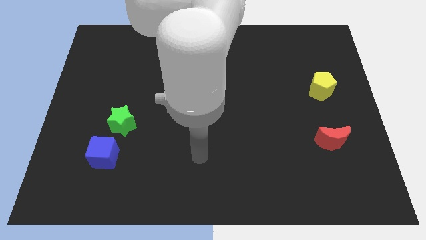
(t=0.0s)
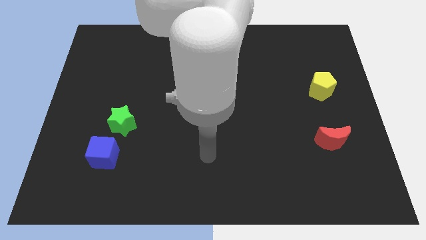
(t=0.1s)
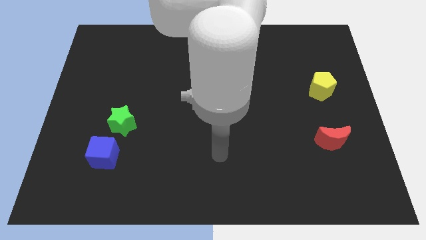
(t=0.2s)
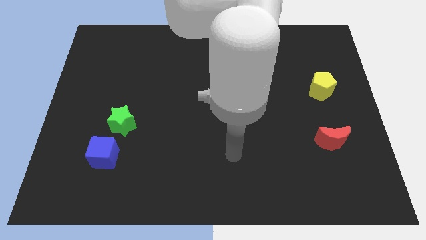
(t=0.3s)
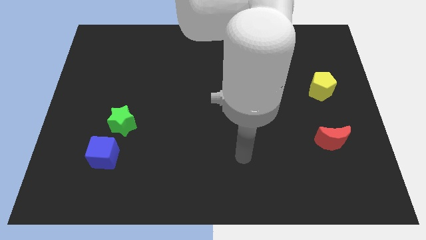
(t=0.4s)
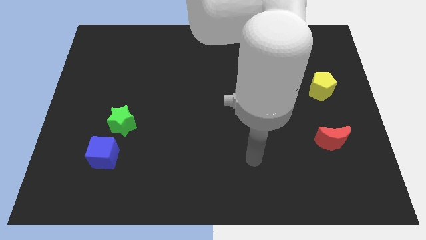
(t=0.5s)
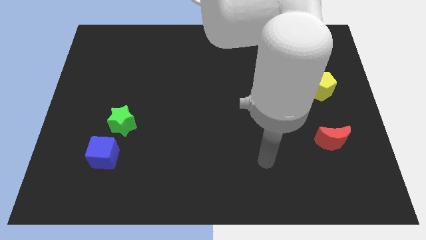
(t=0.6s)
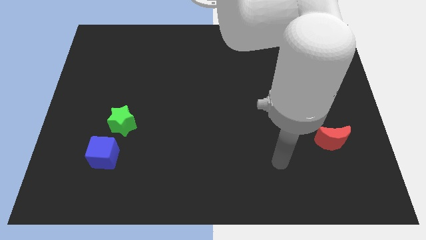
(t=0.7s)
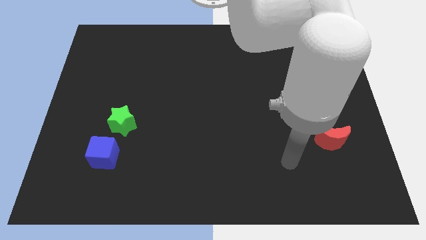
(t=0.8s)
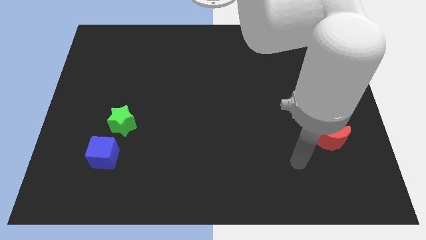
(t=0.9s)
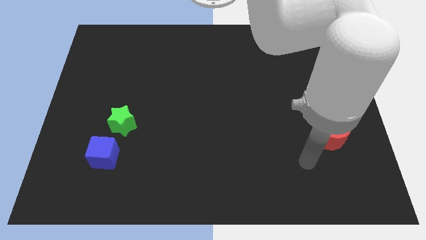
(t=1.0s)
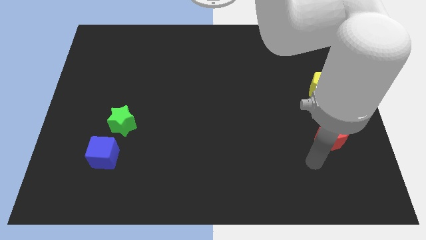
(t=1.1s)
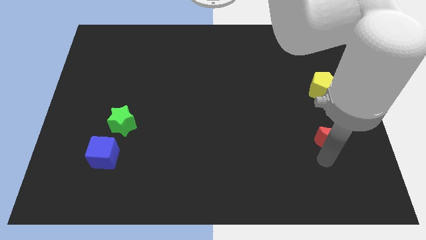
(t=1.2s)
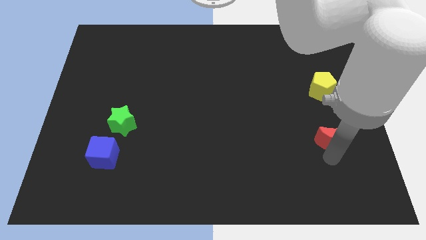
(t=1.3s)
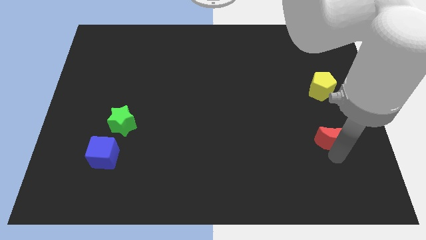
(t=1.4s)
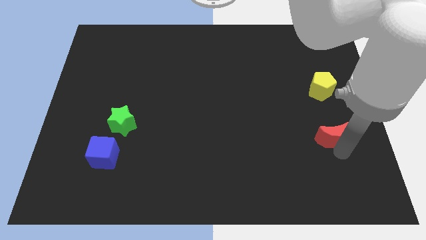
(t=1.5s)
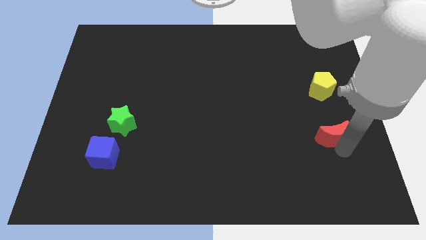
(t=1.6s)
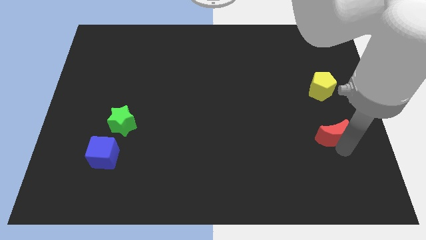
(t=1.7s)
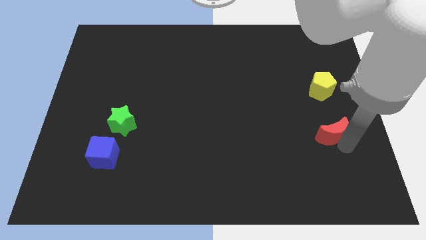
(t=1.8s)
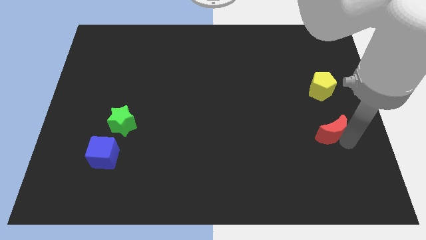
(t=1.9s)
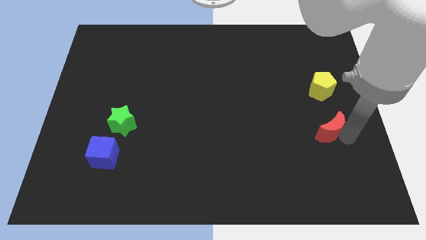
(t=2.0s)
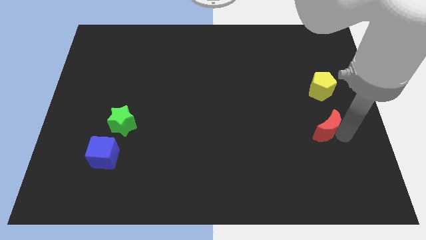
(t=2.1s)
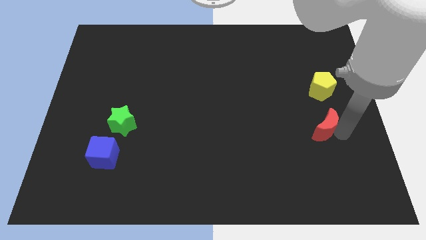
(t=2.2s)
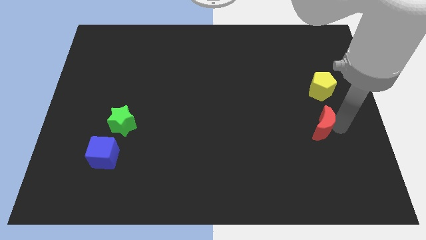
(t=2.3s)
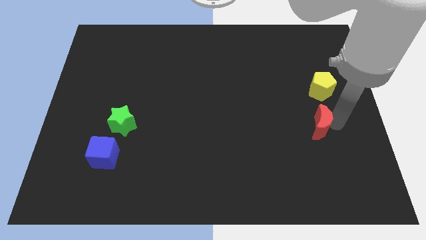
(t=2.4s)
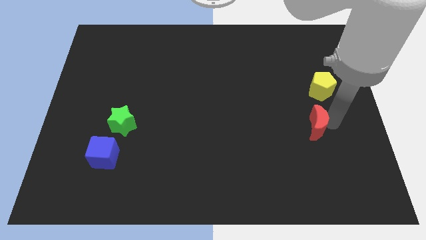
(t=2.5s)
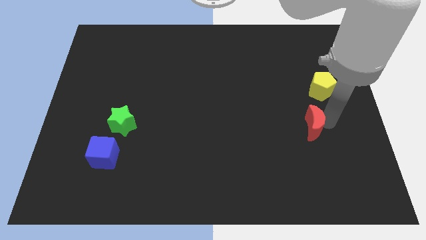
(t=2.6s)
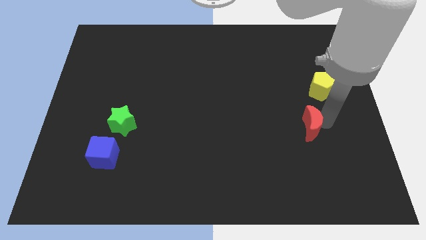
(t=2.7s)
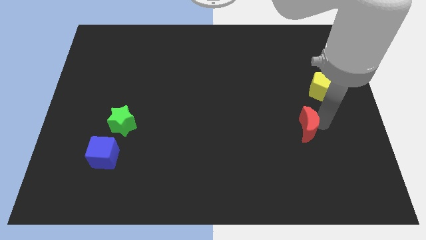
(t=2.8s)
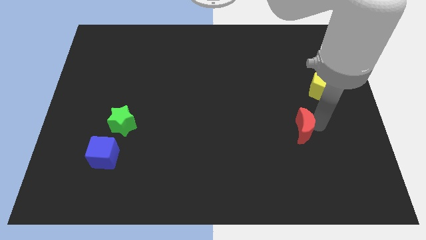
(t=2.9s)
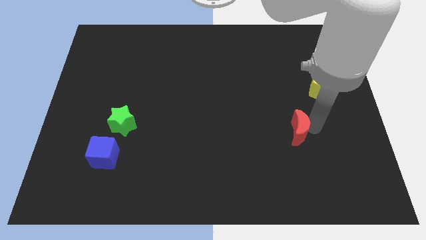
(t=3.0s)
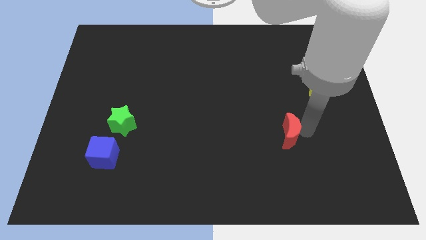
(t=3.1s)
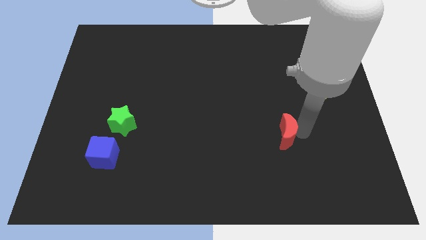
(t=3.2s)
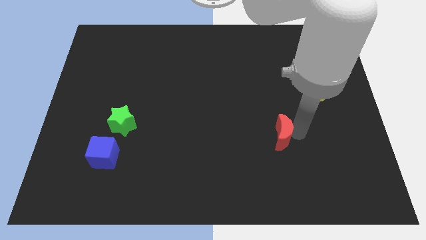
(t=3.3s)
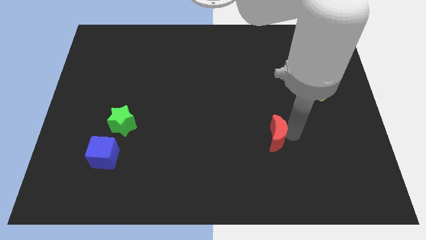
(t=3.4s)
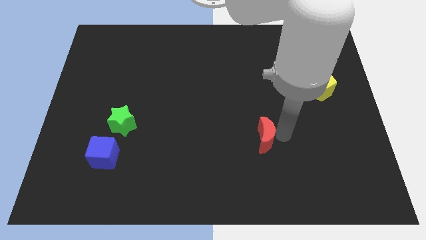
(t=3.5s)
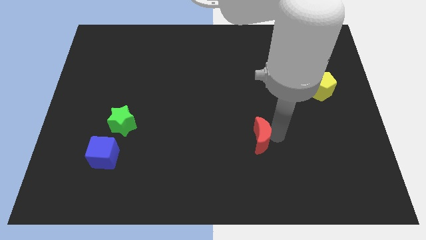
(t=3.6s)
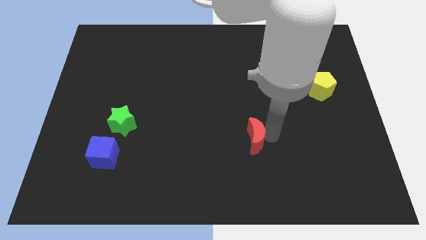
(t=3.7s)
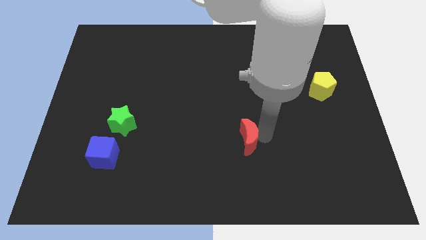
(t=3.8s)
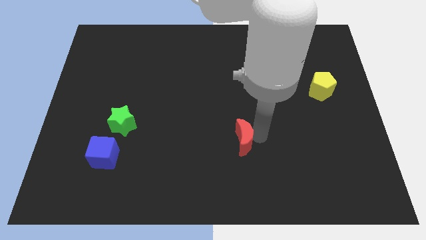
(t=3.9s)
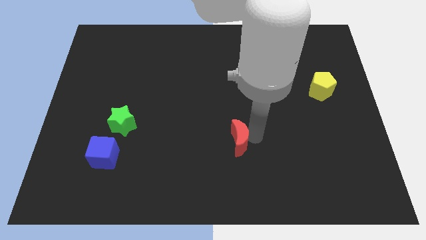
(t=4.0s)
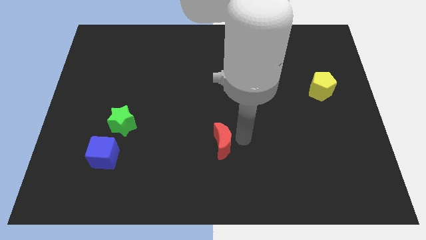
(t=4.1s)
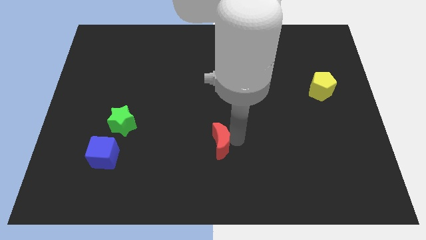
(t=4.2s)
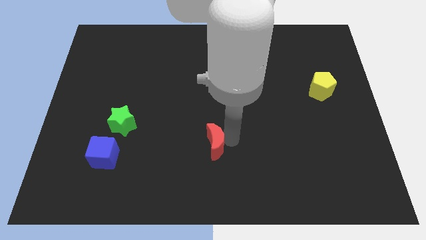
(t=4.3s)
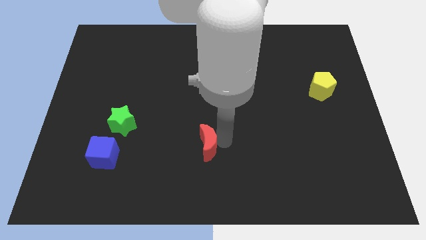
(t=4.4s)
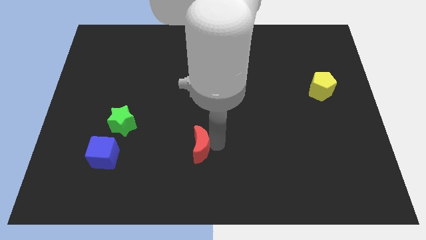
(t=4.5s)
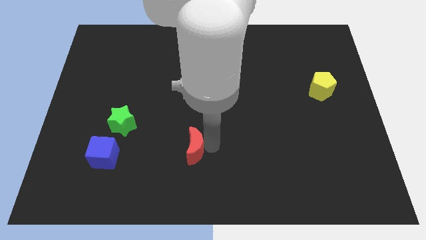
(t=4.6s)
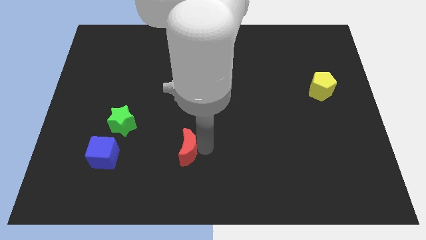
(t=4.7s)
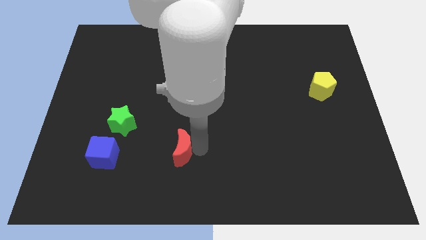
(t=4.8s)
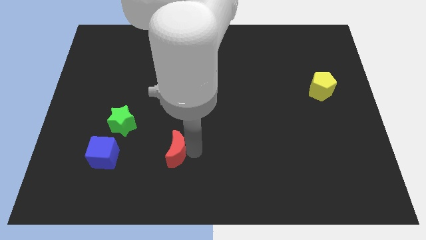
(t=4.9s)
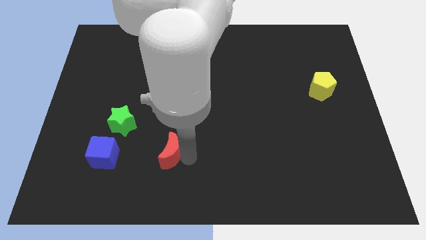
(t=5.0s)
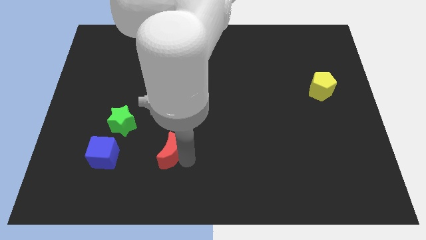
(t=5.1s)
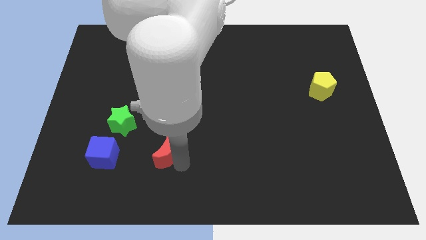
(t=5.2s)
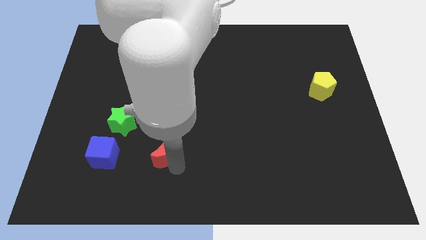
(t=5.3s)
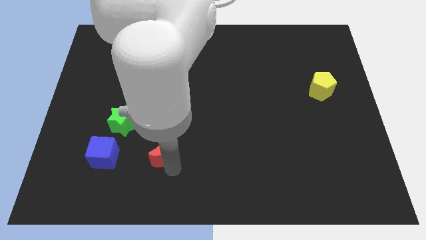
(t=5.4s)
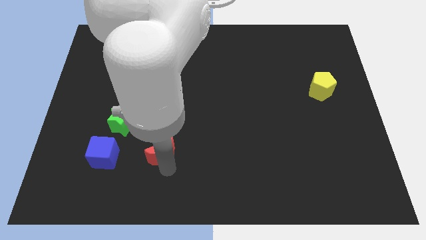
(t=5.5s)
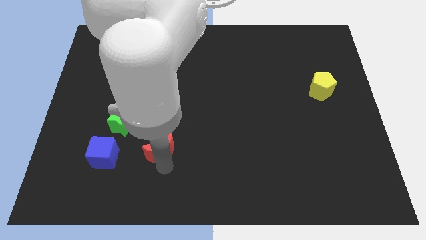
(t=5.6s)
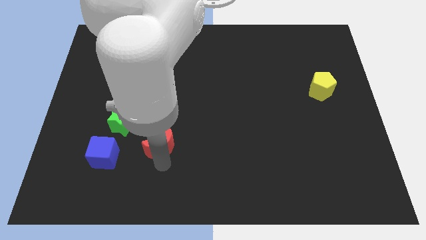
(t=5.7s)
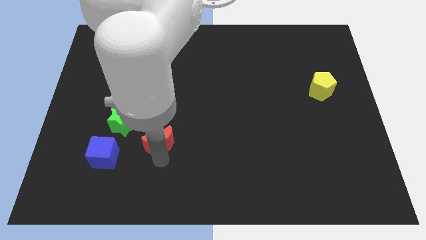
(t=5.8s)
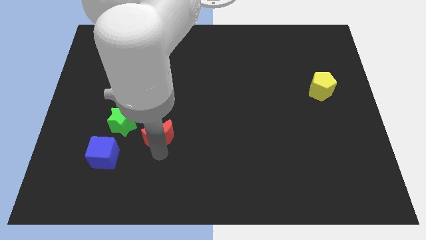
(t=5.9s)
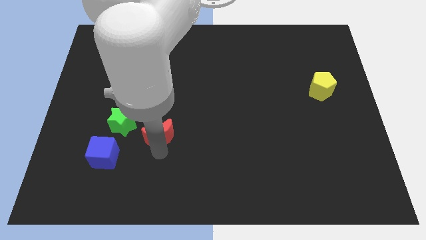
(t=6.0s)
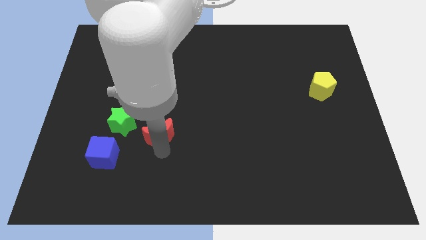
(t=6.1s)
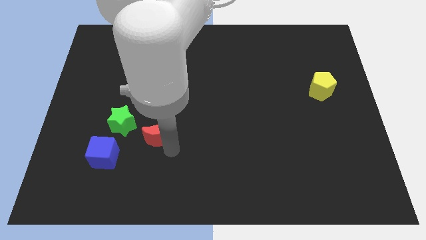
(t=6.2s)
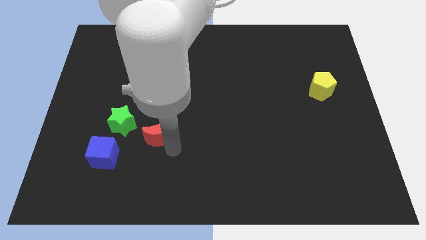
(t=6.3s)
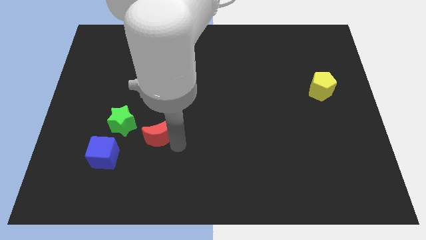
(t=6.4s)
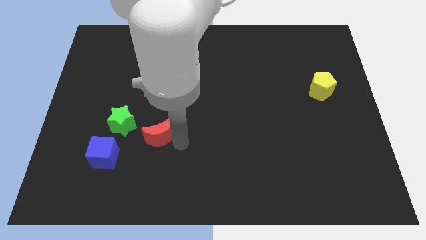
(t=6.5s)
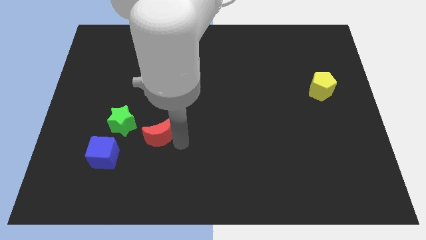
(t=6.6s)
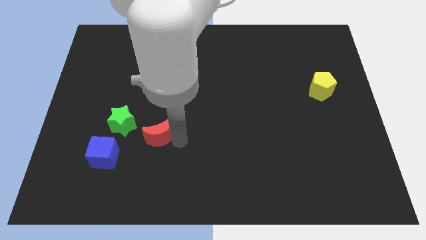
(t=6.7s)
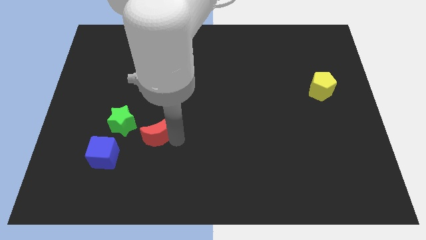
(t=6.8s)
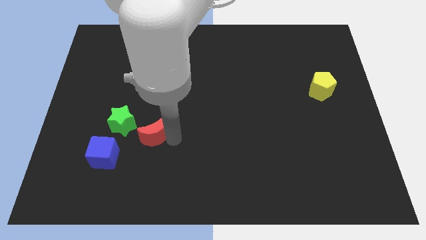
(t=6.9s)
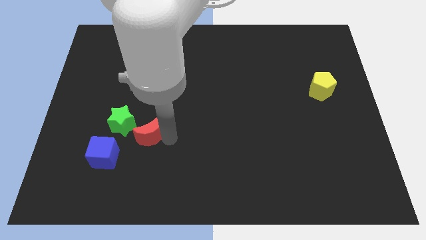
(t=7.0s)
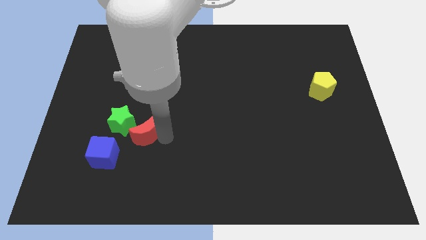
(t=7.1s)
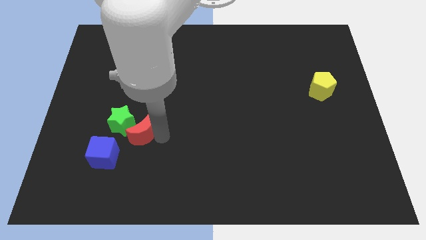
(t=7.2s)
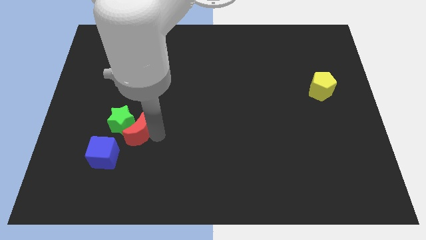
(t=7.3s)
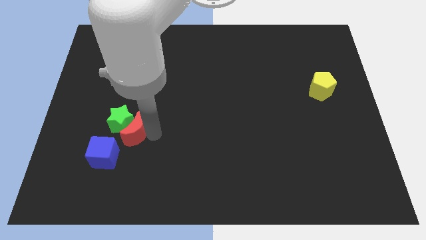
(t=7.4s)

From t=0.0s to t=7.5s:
put the moon towards the star

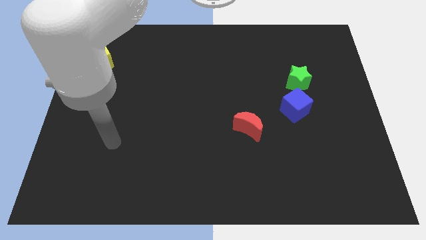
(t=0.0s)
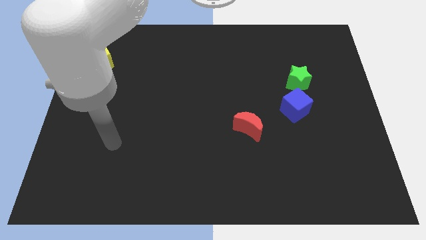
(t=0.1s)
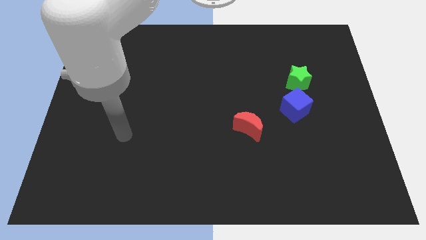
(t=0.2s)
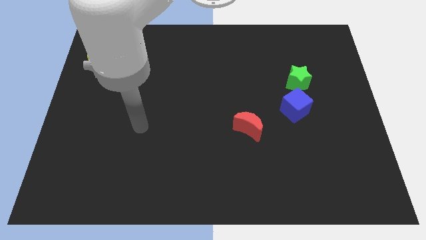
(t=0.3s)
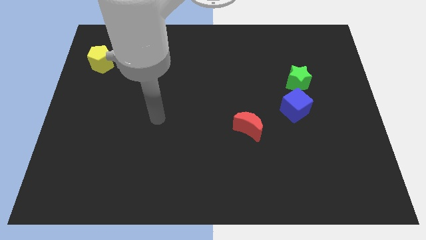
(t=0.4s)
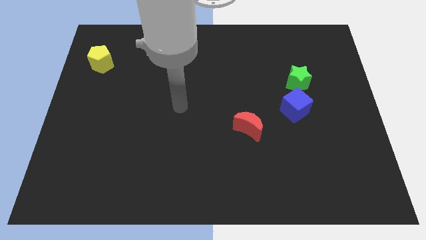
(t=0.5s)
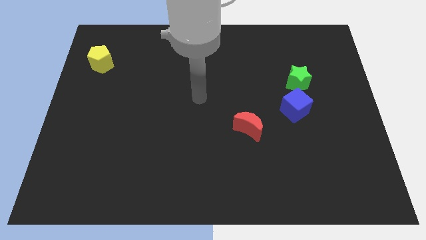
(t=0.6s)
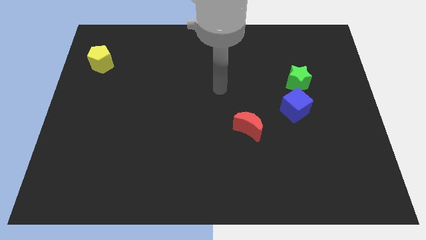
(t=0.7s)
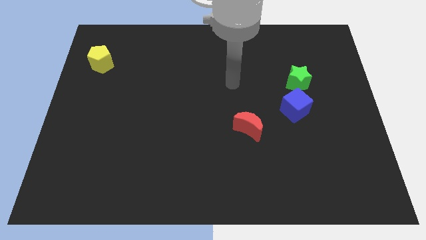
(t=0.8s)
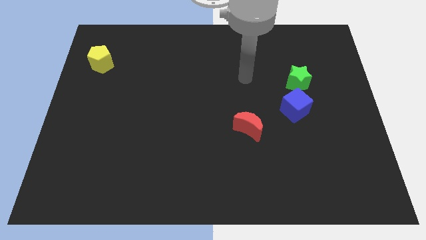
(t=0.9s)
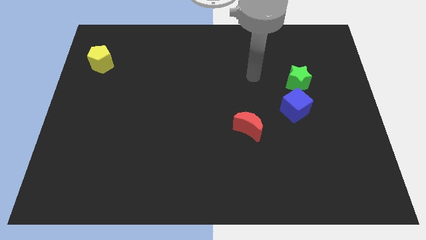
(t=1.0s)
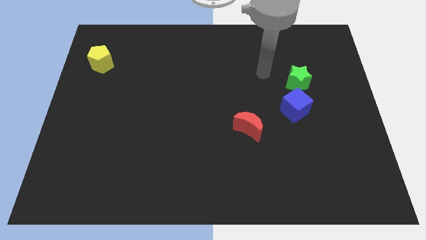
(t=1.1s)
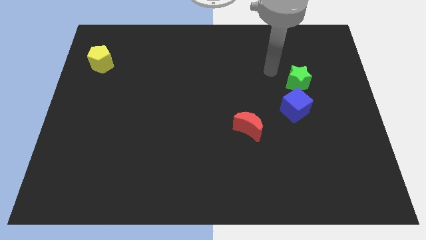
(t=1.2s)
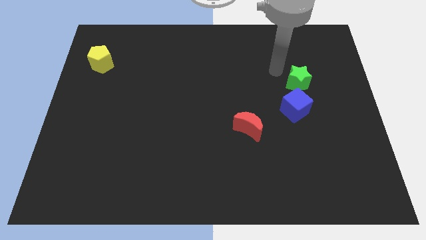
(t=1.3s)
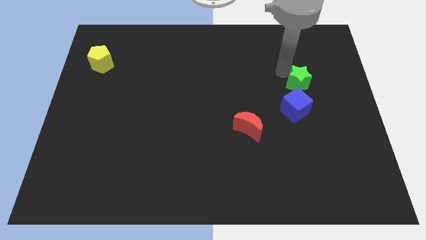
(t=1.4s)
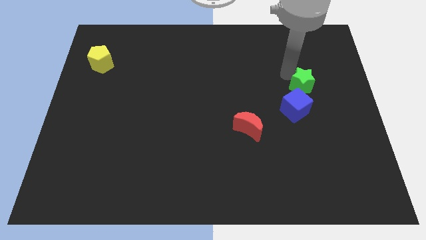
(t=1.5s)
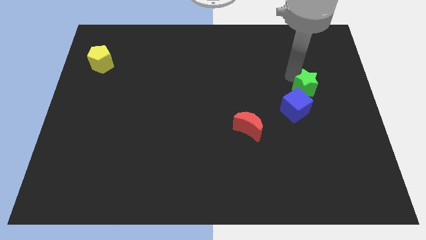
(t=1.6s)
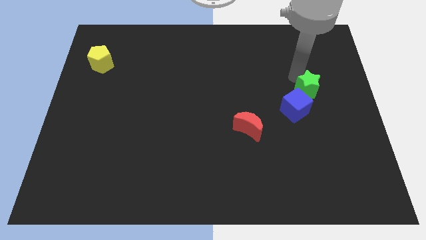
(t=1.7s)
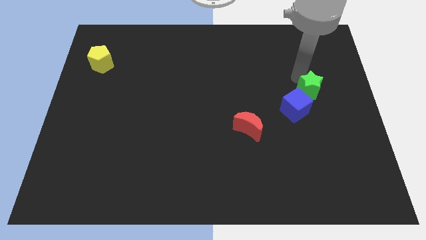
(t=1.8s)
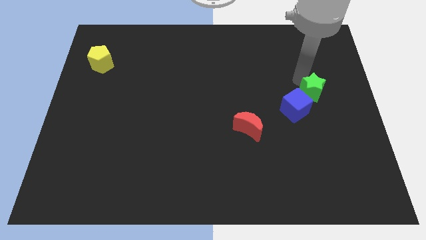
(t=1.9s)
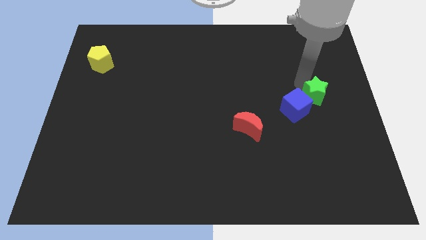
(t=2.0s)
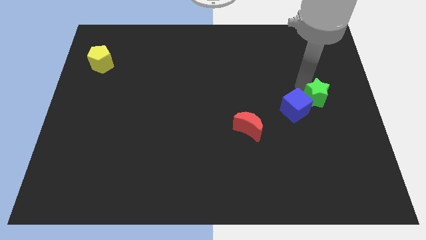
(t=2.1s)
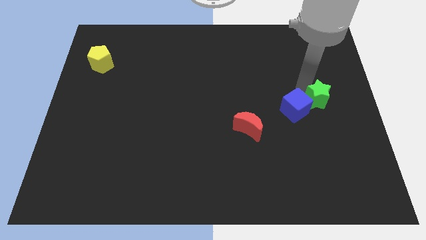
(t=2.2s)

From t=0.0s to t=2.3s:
move the green block towards the blue block
